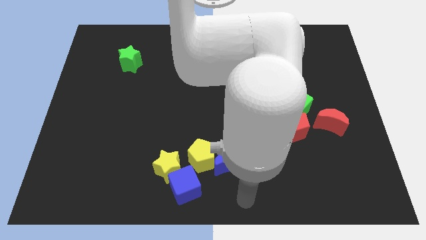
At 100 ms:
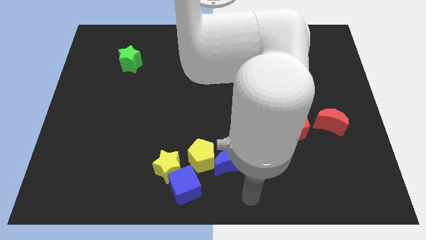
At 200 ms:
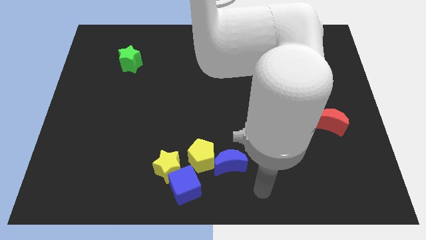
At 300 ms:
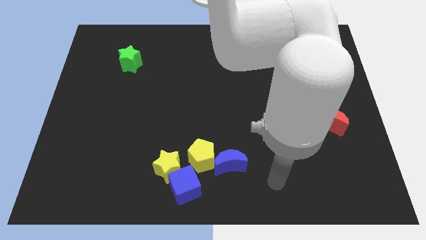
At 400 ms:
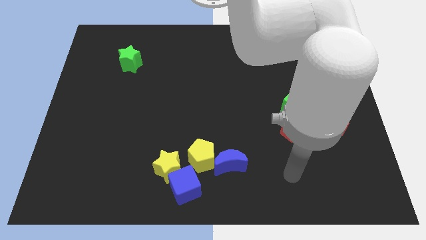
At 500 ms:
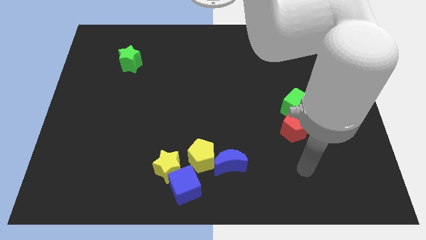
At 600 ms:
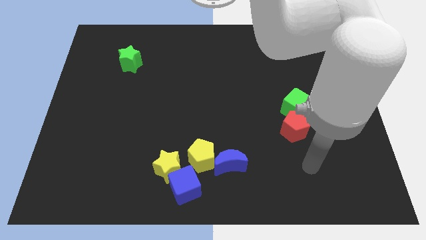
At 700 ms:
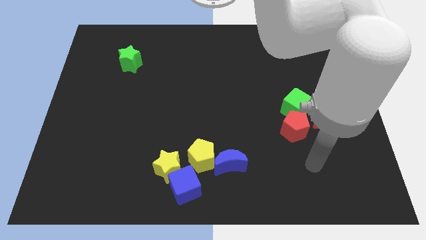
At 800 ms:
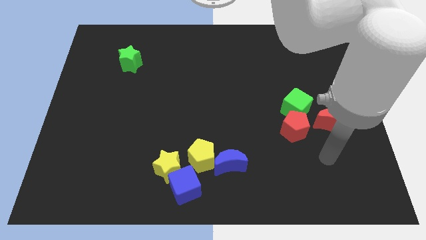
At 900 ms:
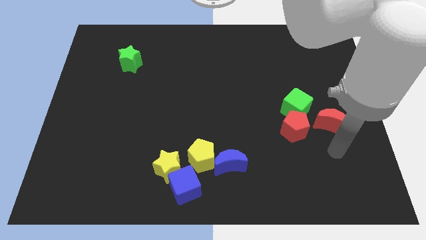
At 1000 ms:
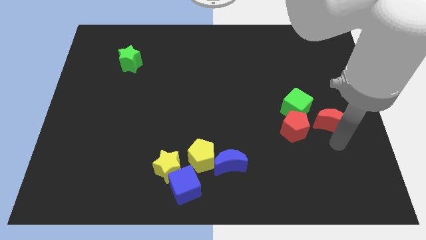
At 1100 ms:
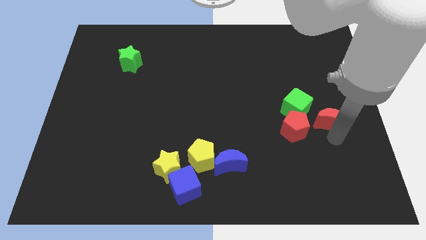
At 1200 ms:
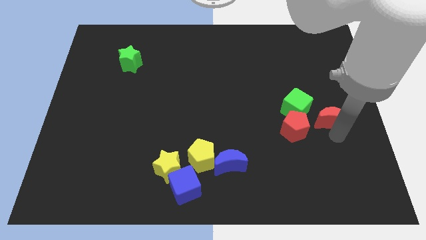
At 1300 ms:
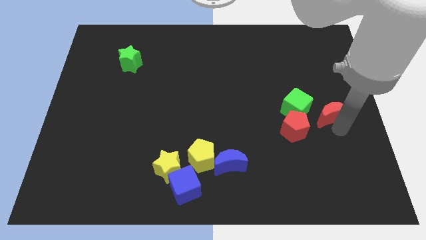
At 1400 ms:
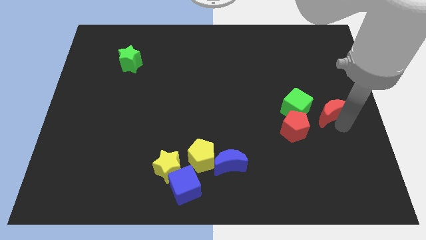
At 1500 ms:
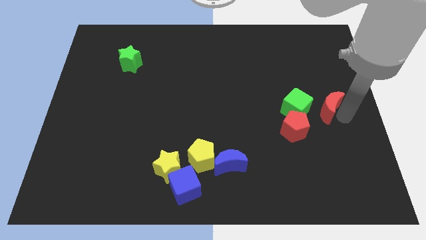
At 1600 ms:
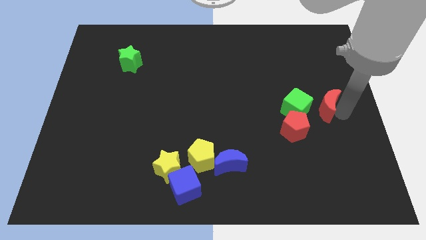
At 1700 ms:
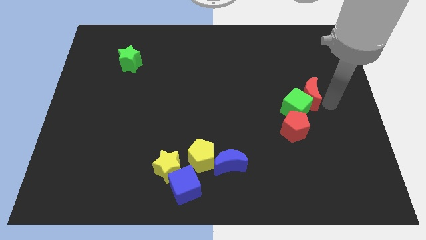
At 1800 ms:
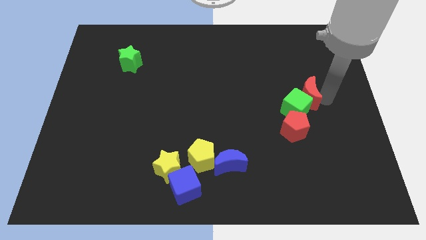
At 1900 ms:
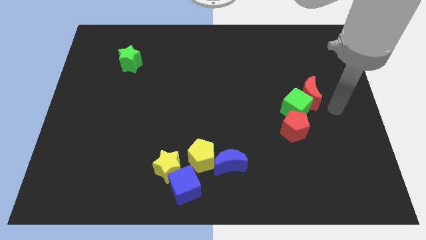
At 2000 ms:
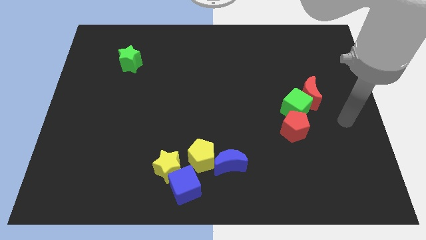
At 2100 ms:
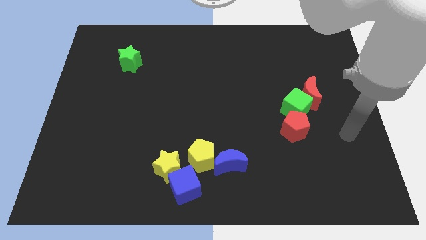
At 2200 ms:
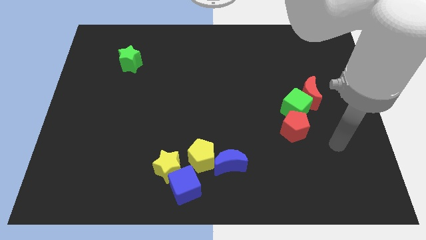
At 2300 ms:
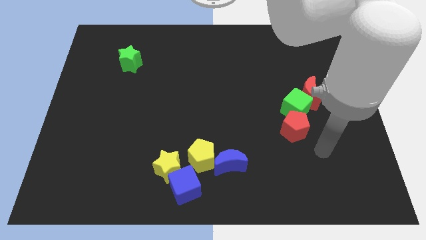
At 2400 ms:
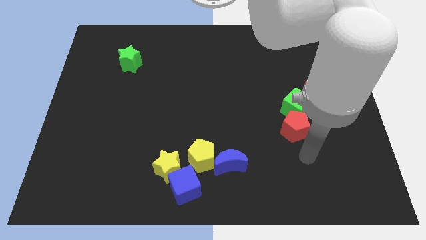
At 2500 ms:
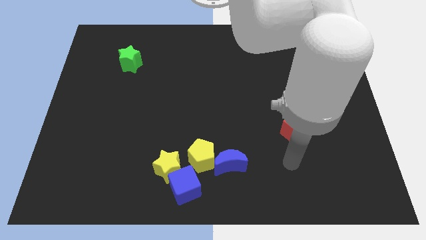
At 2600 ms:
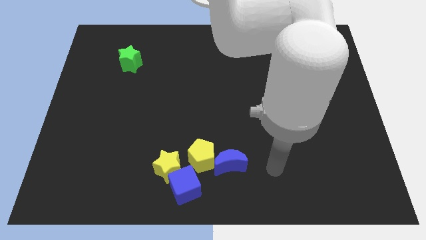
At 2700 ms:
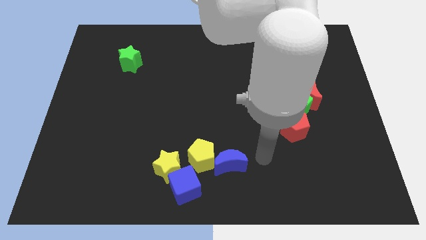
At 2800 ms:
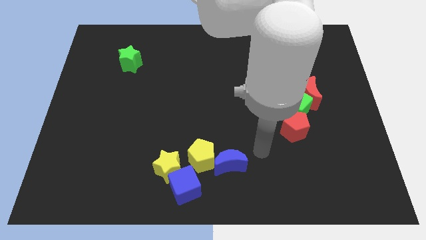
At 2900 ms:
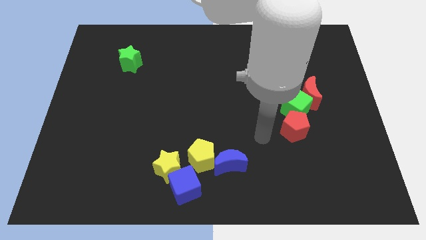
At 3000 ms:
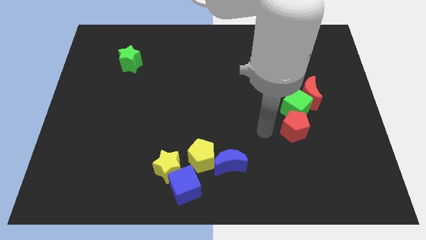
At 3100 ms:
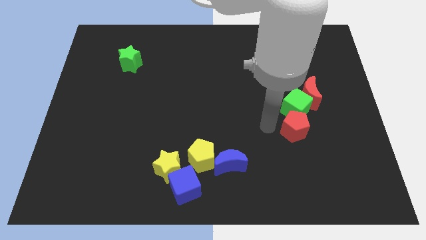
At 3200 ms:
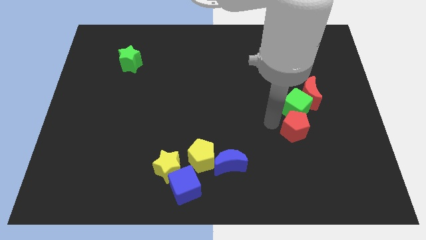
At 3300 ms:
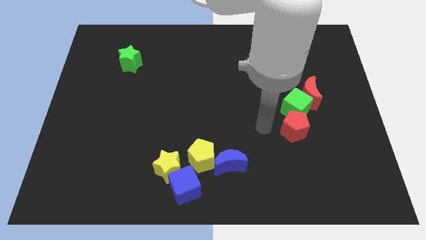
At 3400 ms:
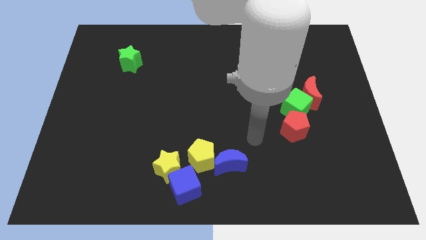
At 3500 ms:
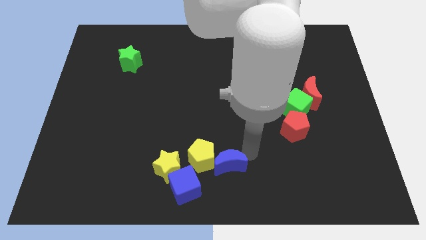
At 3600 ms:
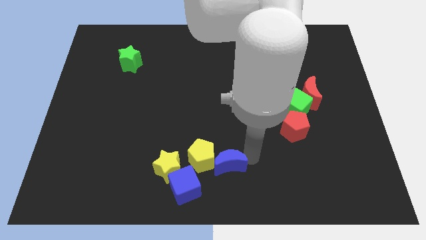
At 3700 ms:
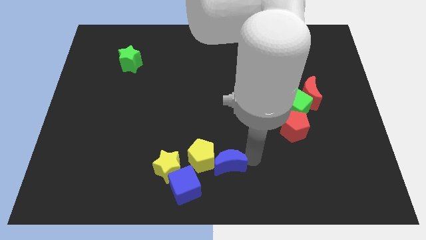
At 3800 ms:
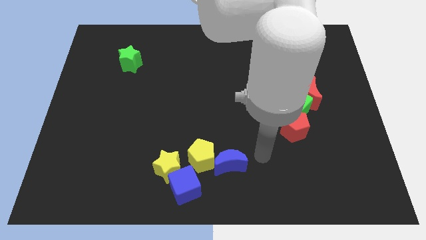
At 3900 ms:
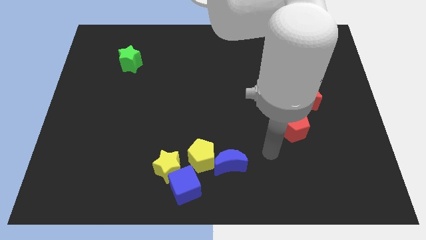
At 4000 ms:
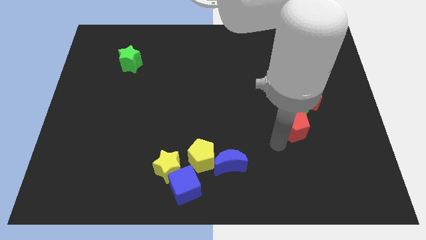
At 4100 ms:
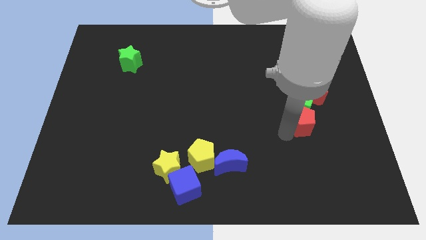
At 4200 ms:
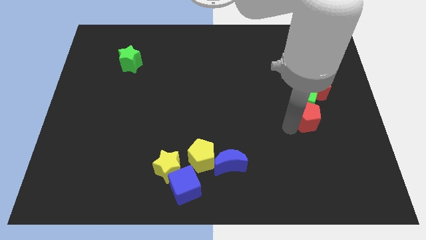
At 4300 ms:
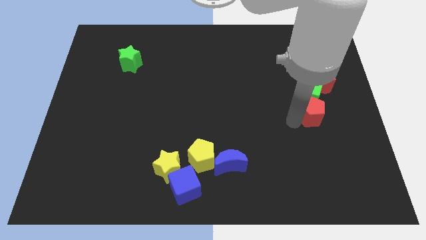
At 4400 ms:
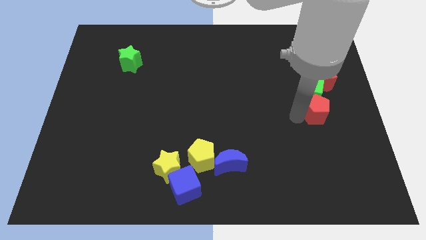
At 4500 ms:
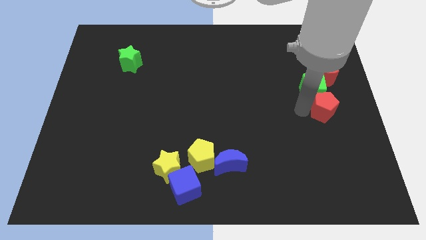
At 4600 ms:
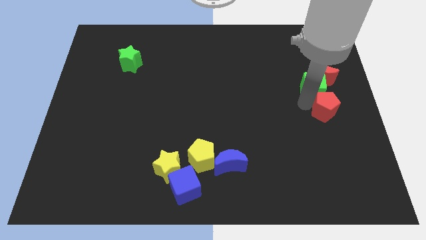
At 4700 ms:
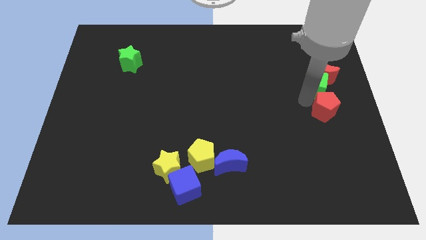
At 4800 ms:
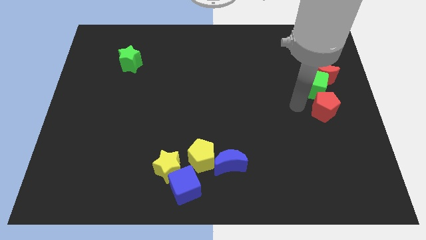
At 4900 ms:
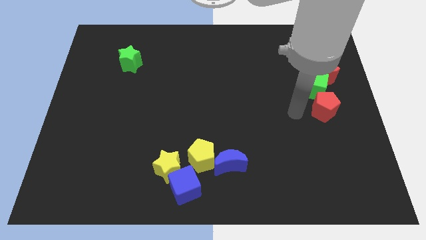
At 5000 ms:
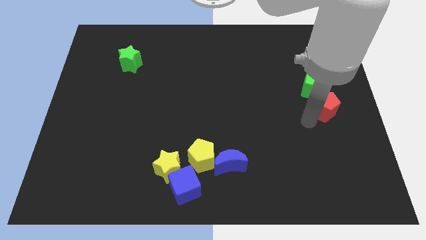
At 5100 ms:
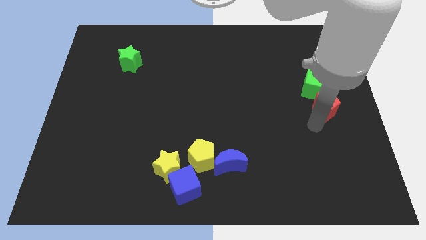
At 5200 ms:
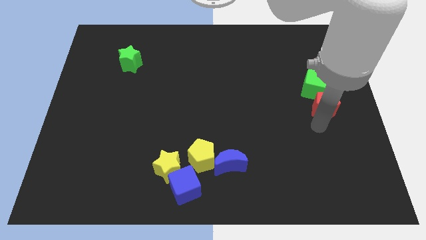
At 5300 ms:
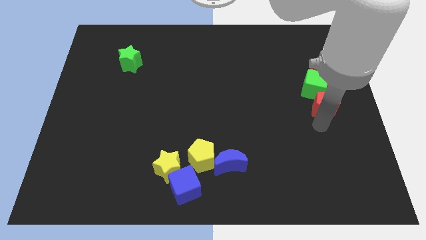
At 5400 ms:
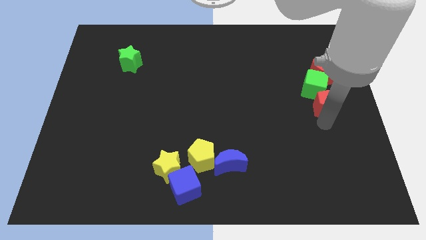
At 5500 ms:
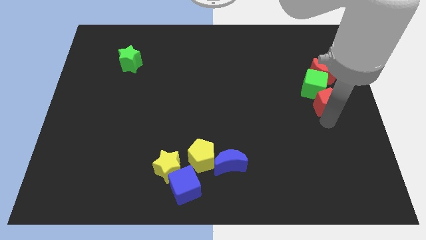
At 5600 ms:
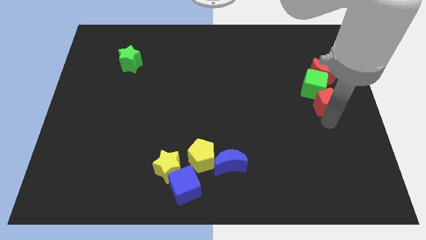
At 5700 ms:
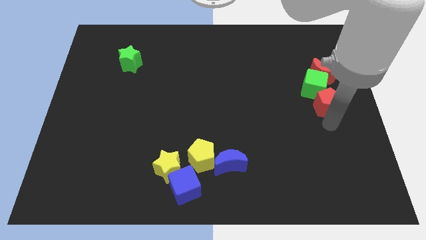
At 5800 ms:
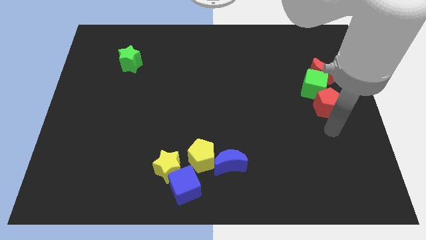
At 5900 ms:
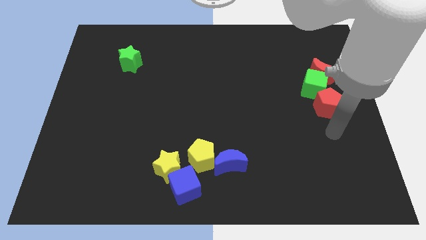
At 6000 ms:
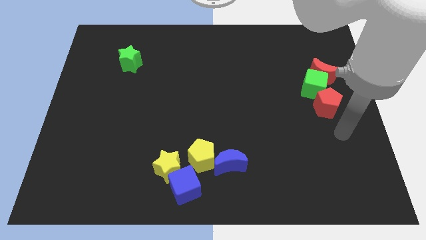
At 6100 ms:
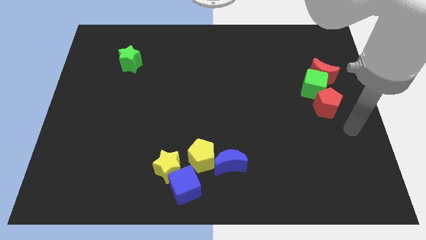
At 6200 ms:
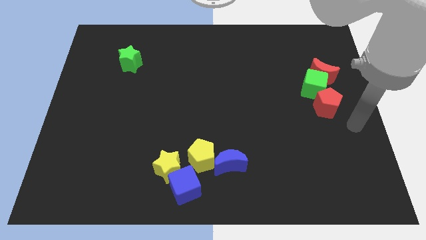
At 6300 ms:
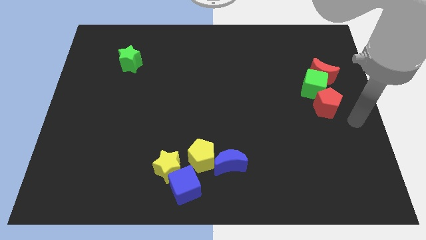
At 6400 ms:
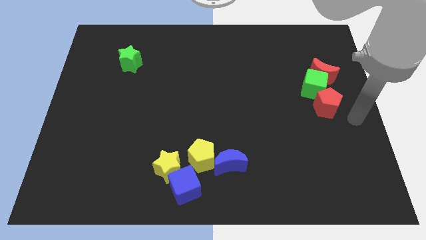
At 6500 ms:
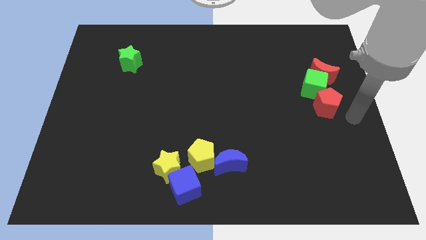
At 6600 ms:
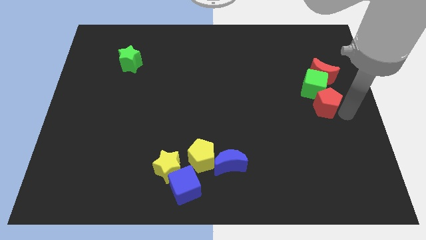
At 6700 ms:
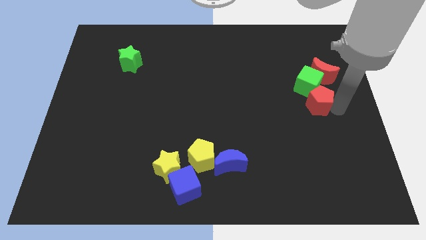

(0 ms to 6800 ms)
push a group of blocks to the left side of the board

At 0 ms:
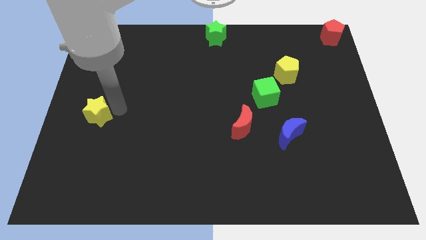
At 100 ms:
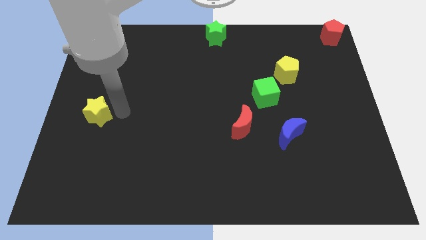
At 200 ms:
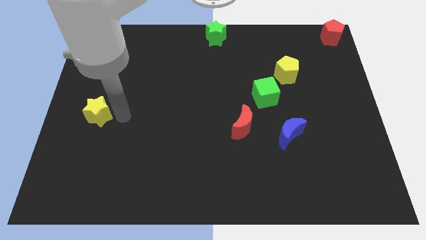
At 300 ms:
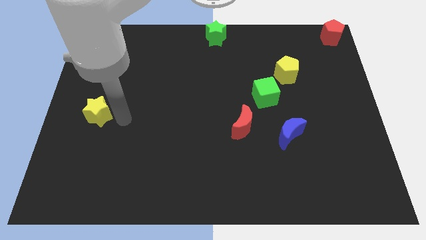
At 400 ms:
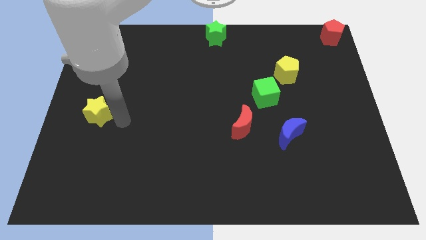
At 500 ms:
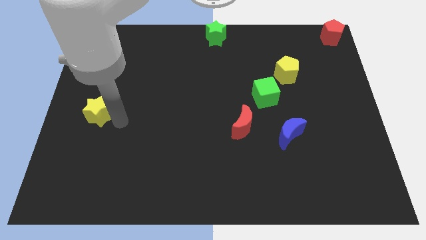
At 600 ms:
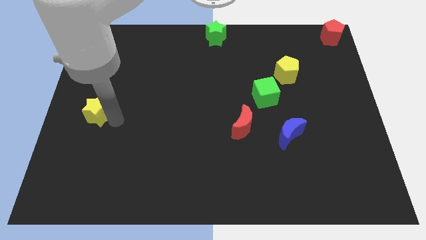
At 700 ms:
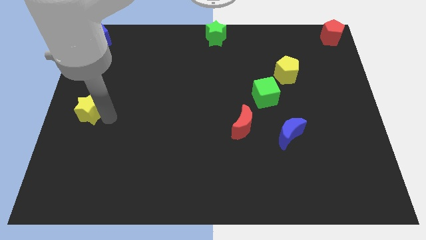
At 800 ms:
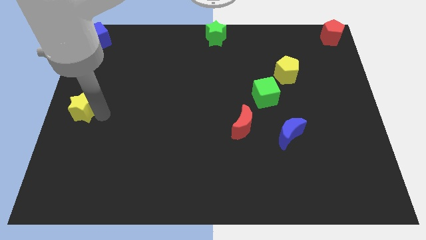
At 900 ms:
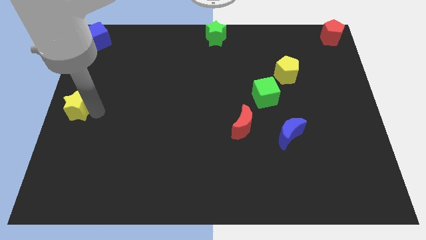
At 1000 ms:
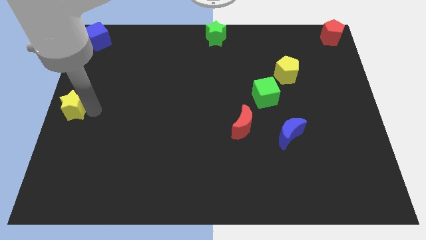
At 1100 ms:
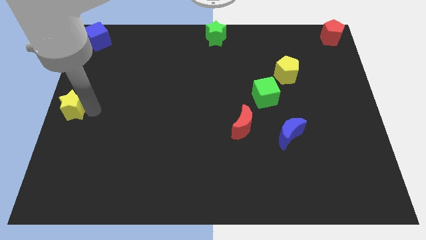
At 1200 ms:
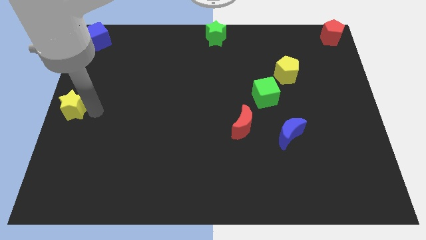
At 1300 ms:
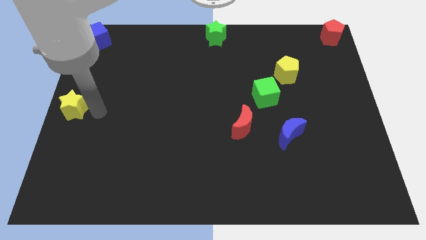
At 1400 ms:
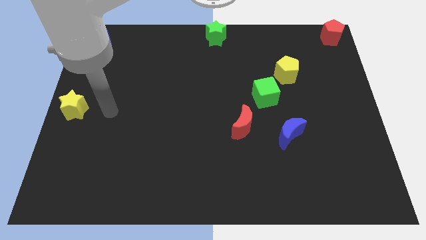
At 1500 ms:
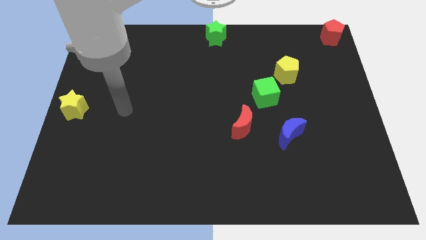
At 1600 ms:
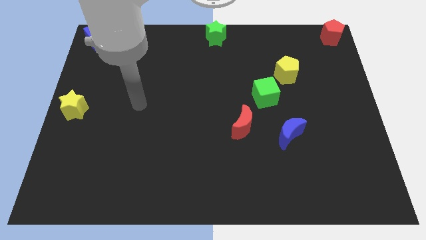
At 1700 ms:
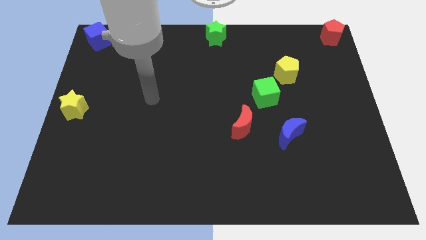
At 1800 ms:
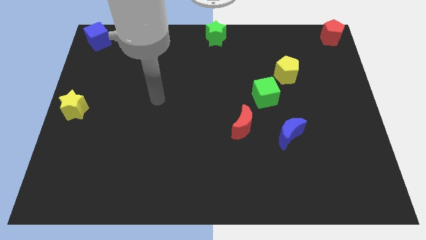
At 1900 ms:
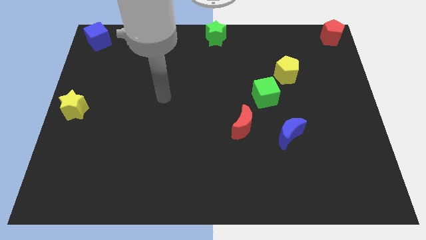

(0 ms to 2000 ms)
slightly move the yellow star to the left center of the board

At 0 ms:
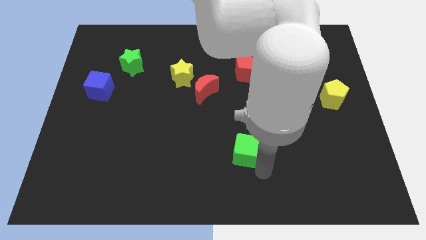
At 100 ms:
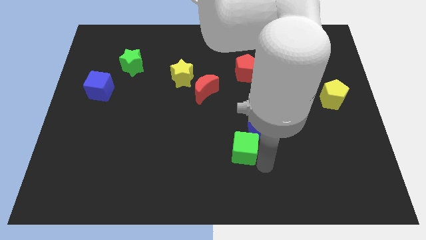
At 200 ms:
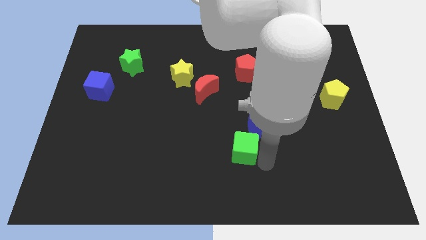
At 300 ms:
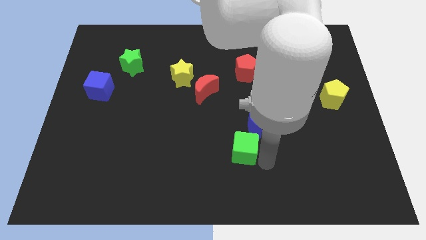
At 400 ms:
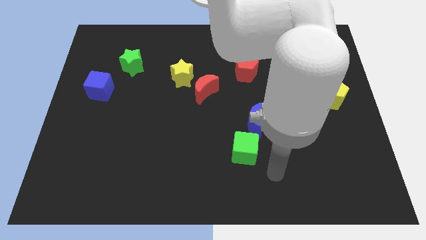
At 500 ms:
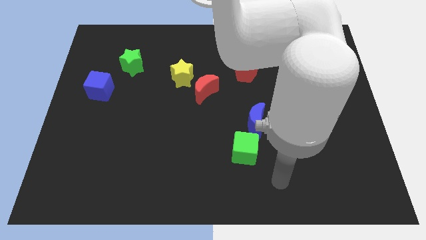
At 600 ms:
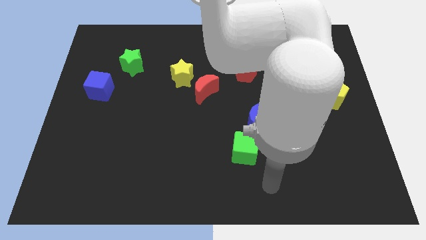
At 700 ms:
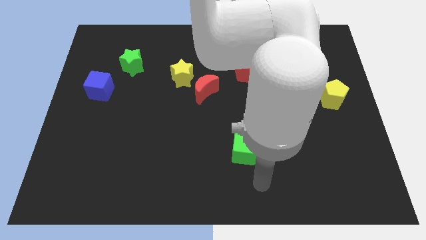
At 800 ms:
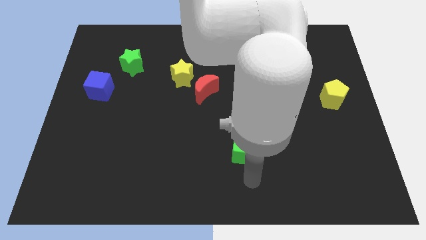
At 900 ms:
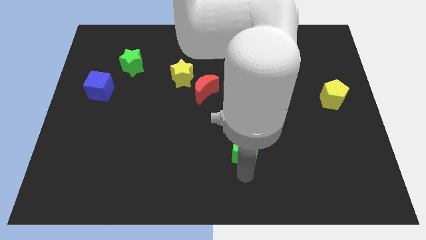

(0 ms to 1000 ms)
slightly push green cube upwards
